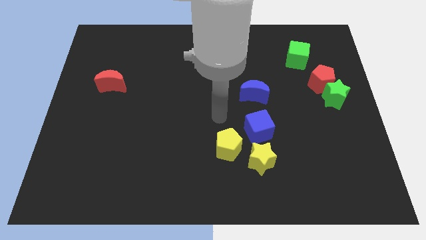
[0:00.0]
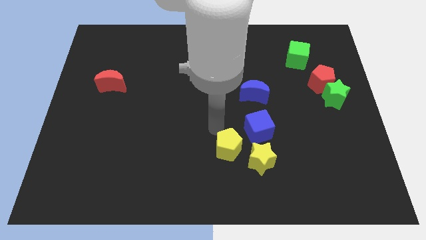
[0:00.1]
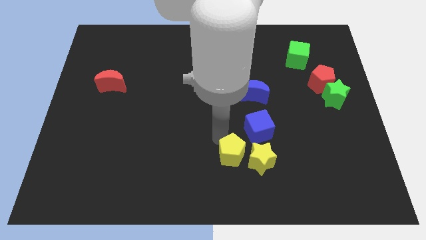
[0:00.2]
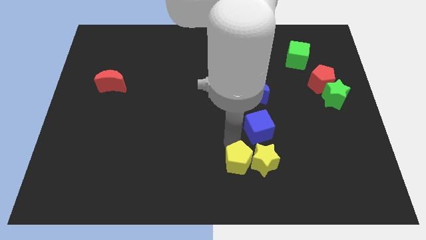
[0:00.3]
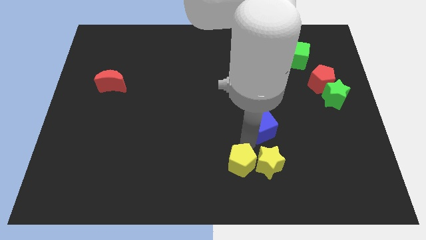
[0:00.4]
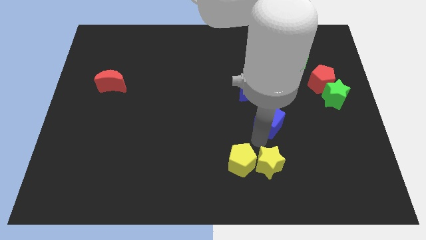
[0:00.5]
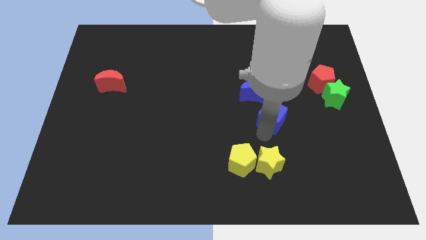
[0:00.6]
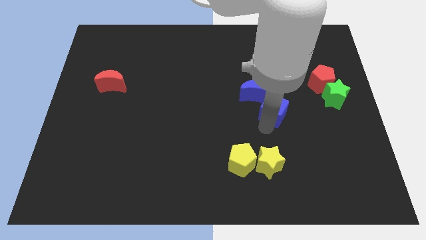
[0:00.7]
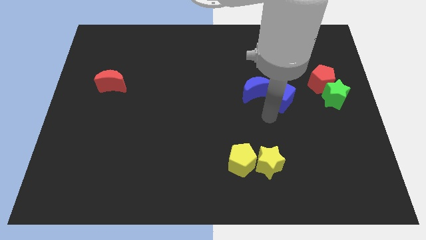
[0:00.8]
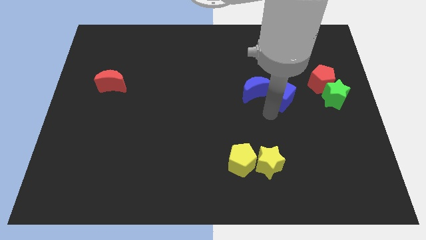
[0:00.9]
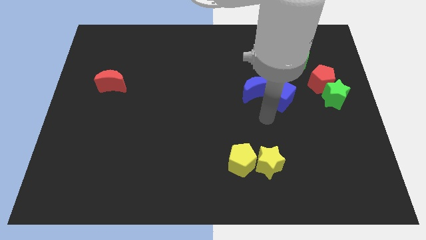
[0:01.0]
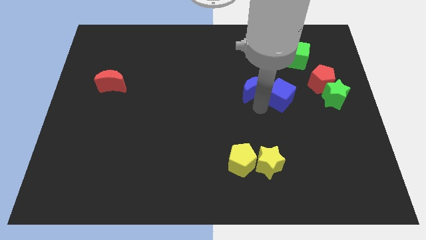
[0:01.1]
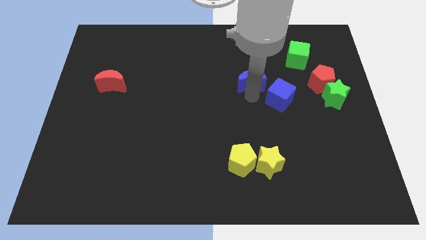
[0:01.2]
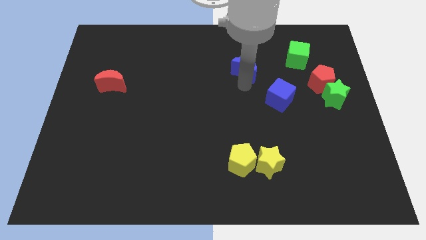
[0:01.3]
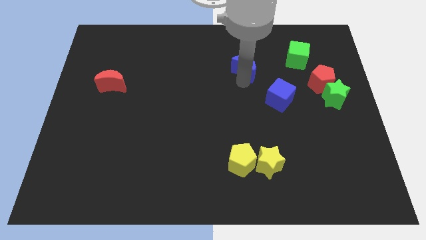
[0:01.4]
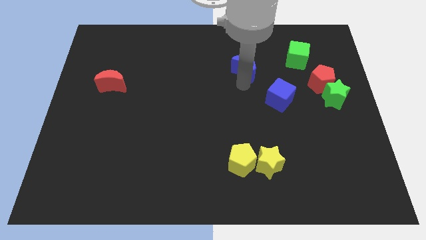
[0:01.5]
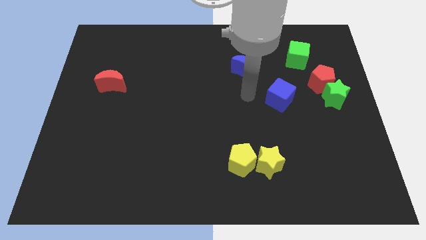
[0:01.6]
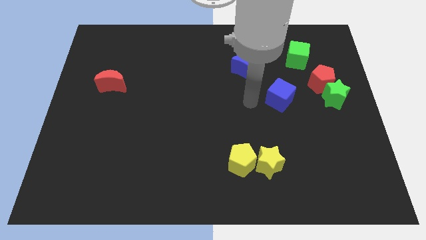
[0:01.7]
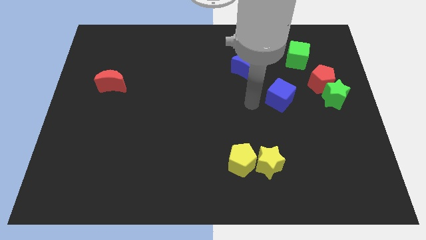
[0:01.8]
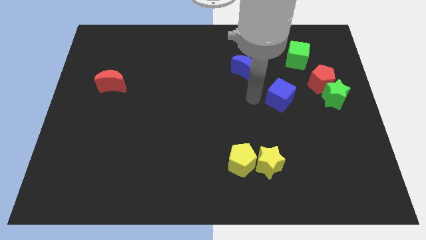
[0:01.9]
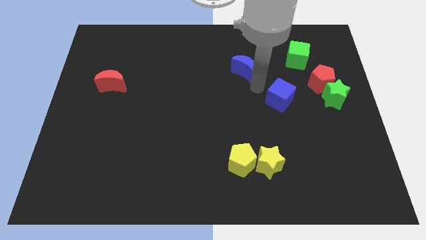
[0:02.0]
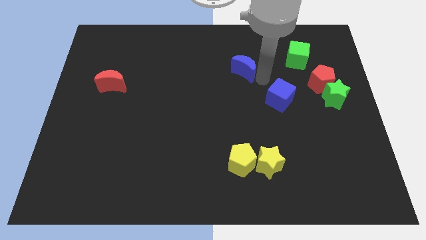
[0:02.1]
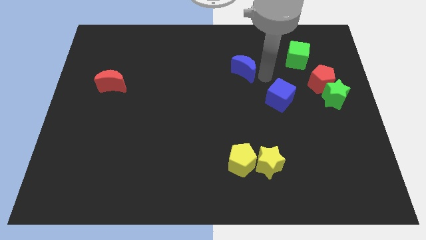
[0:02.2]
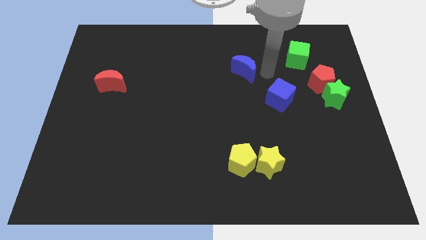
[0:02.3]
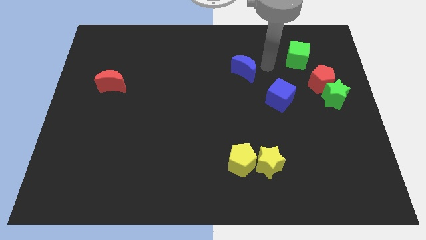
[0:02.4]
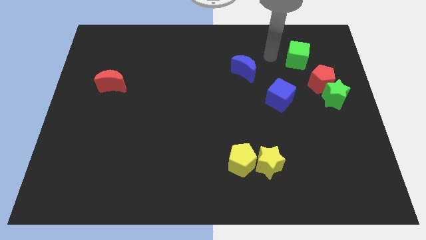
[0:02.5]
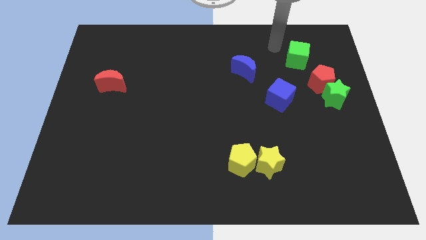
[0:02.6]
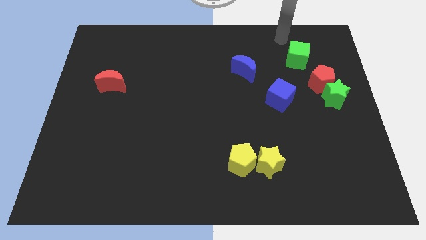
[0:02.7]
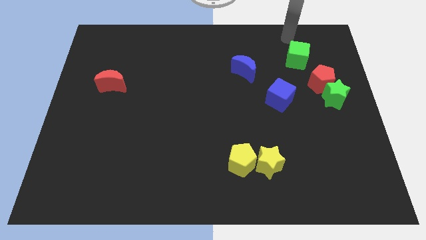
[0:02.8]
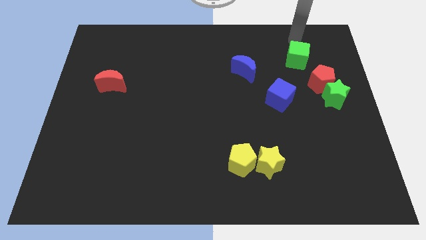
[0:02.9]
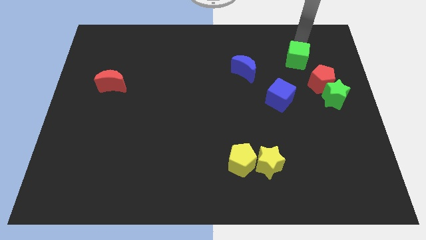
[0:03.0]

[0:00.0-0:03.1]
push the yellow pentagon into the yellow star

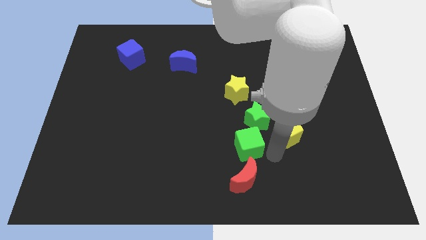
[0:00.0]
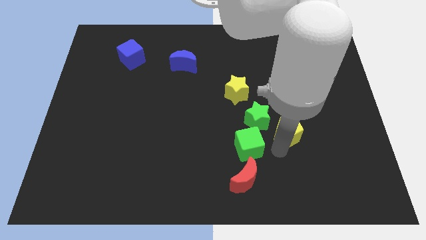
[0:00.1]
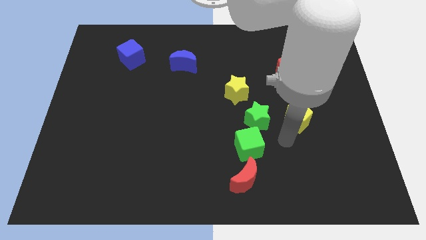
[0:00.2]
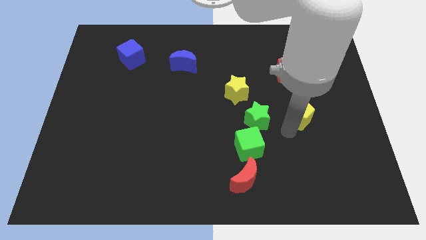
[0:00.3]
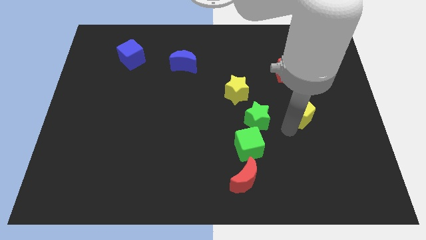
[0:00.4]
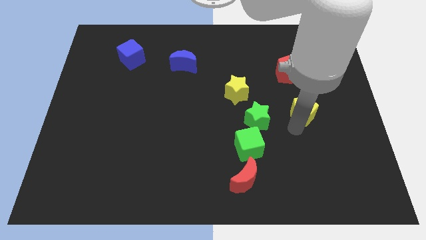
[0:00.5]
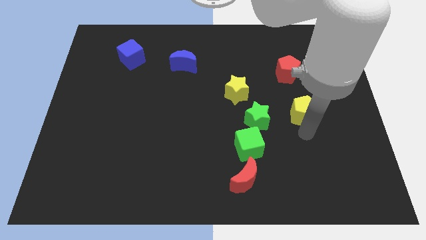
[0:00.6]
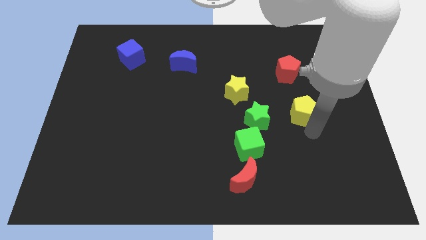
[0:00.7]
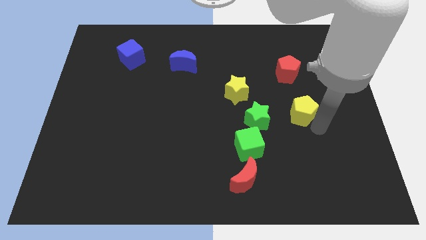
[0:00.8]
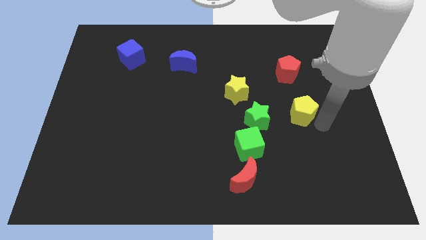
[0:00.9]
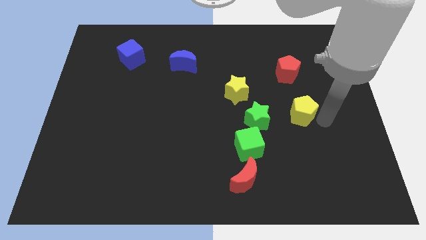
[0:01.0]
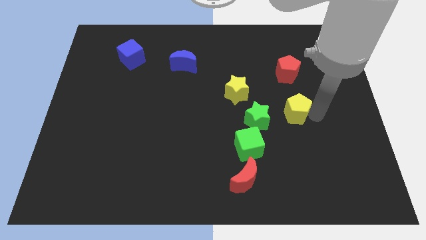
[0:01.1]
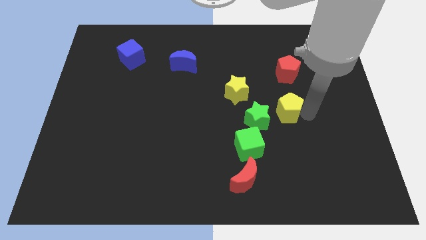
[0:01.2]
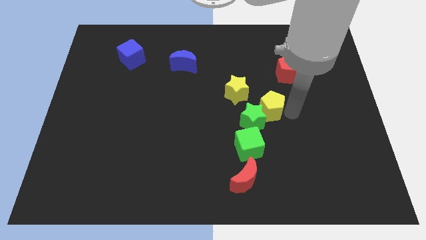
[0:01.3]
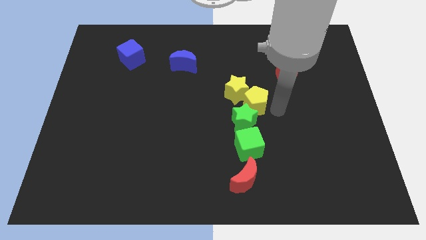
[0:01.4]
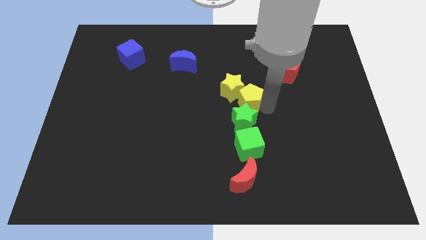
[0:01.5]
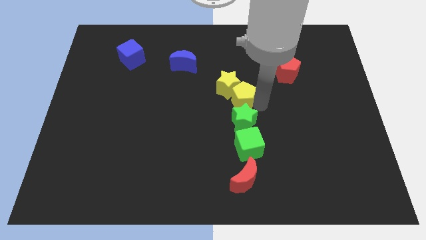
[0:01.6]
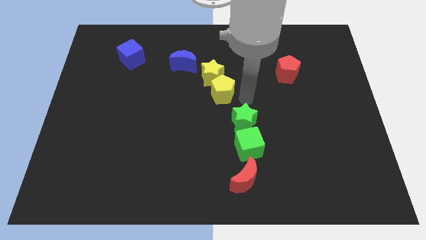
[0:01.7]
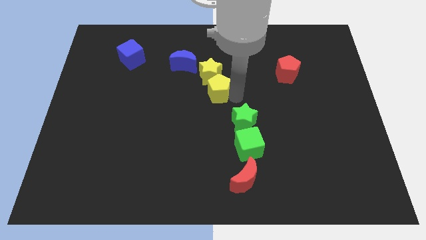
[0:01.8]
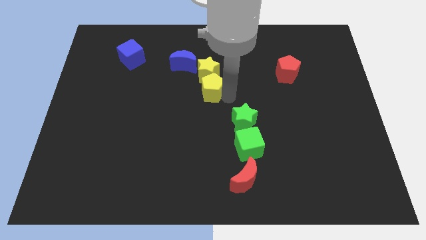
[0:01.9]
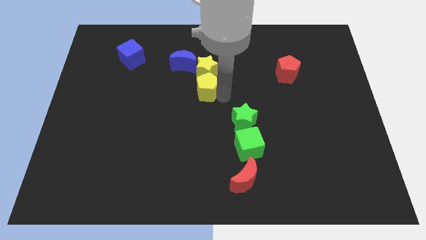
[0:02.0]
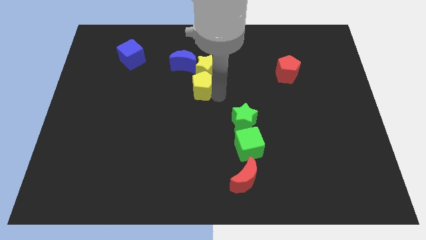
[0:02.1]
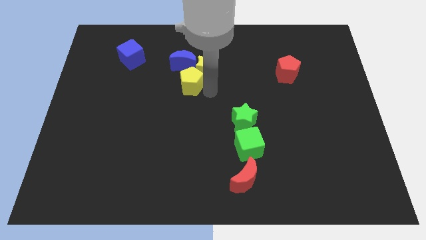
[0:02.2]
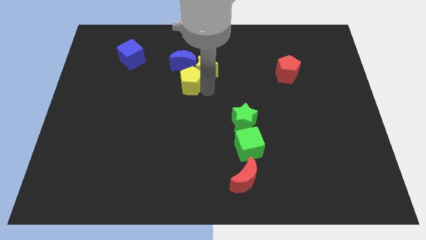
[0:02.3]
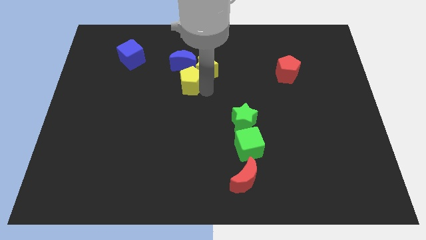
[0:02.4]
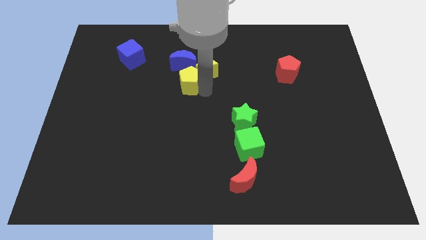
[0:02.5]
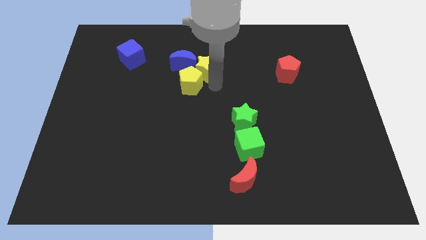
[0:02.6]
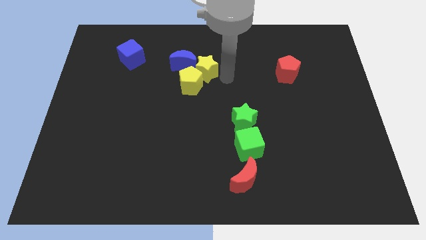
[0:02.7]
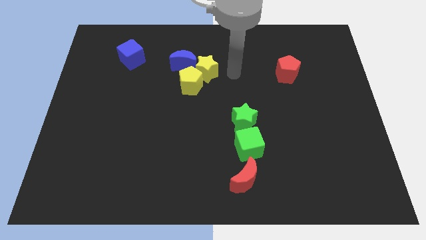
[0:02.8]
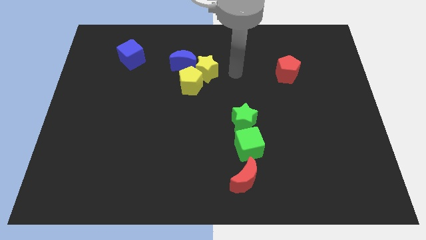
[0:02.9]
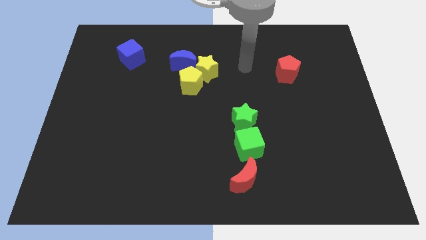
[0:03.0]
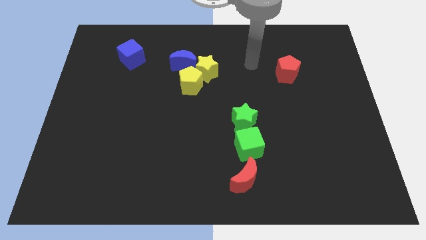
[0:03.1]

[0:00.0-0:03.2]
move the yellow pentagon along with yellow star close to the blue crescent

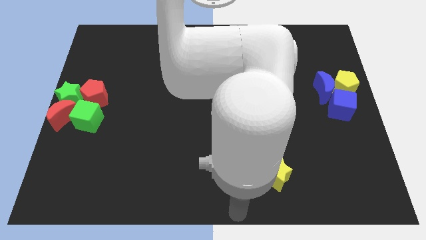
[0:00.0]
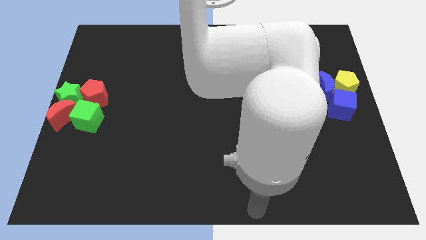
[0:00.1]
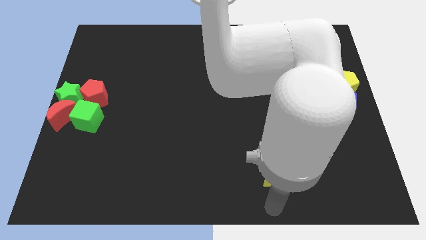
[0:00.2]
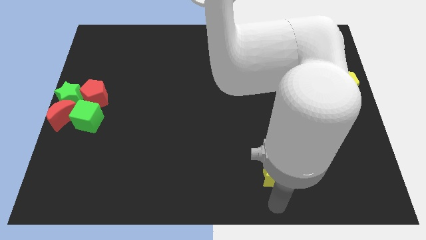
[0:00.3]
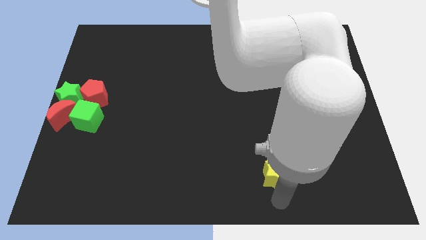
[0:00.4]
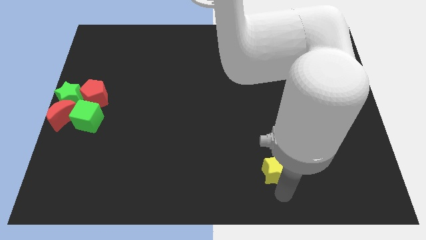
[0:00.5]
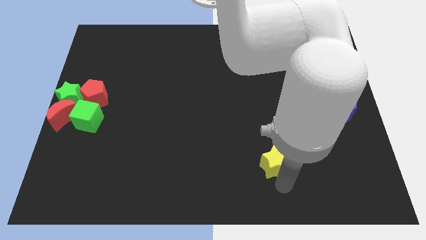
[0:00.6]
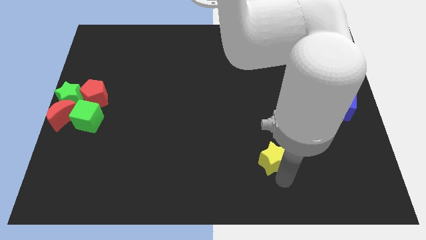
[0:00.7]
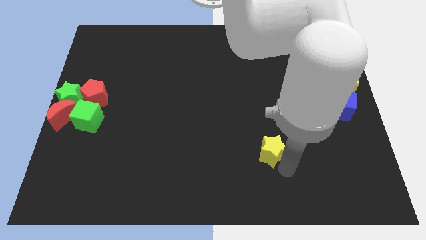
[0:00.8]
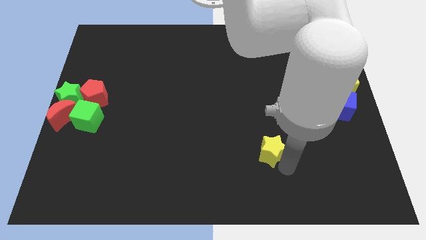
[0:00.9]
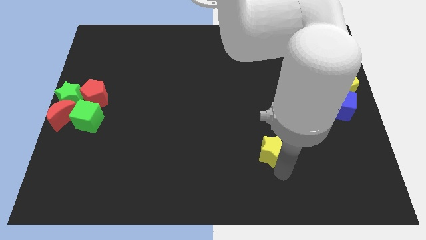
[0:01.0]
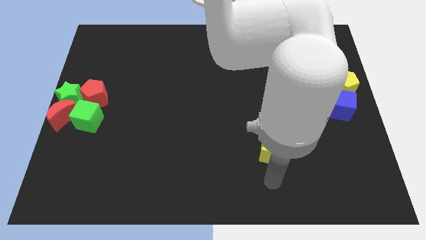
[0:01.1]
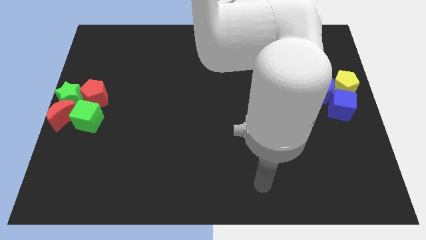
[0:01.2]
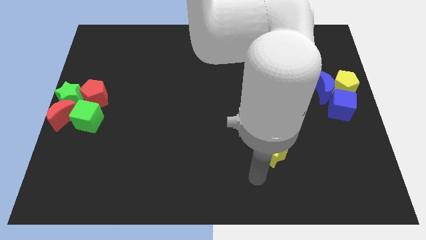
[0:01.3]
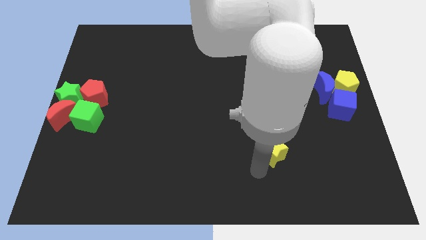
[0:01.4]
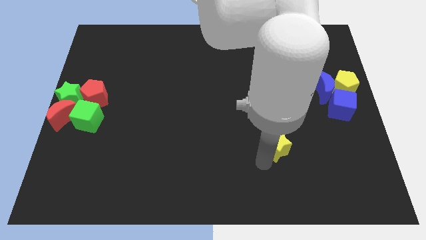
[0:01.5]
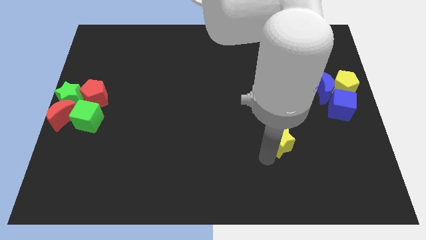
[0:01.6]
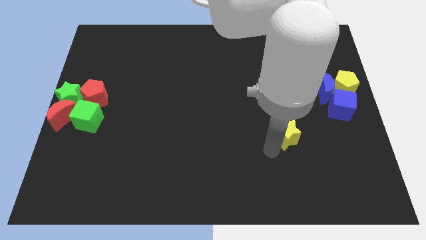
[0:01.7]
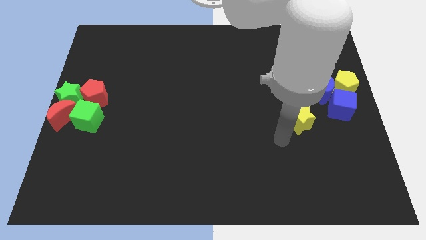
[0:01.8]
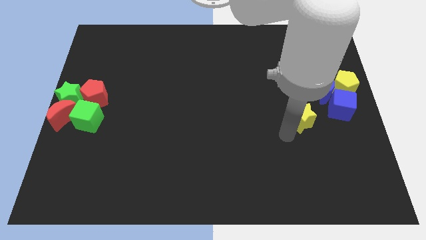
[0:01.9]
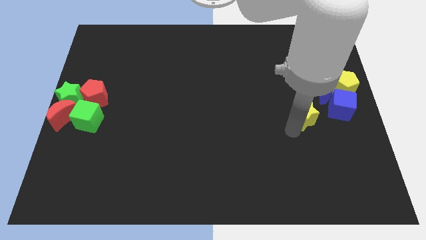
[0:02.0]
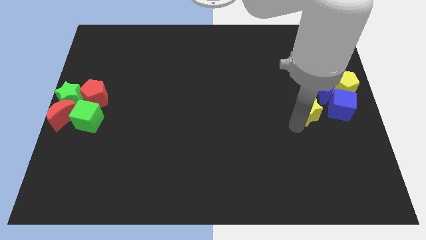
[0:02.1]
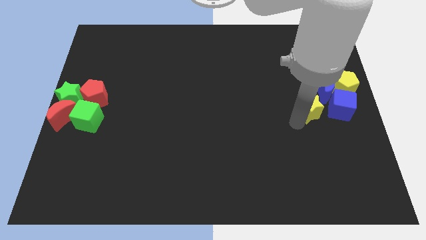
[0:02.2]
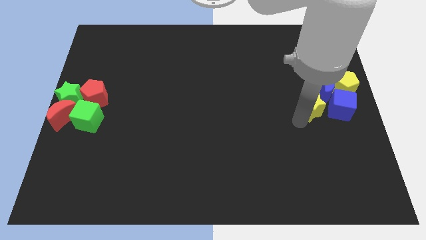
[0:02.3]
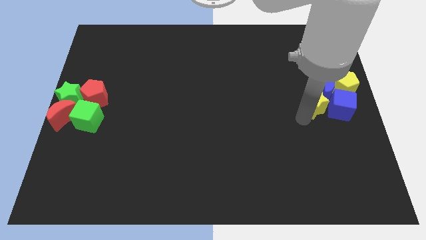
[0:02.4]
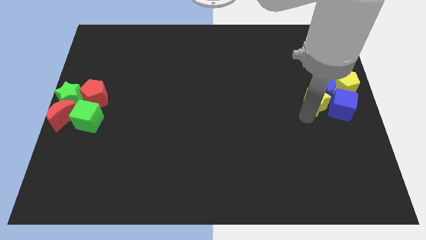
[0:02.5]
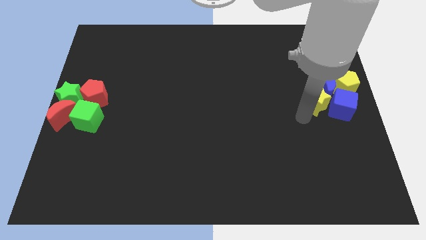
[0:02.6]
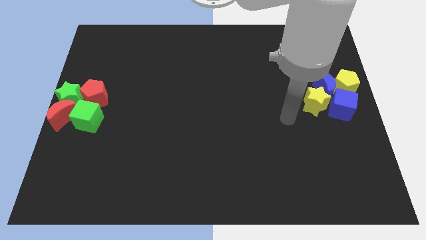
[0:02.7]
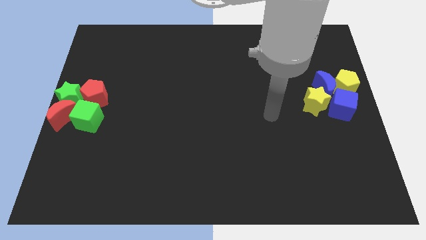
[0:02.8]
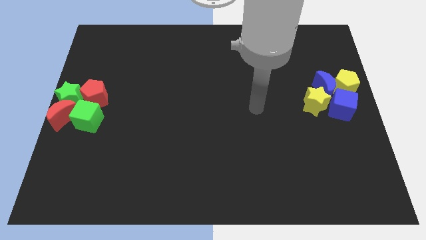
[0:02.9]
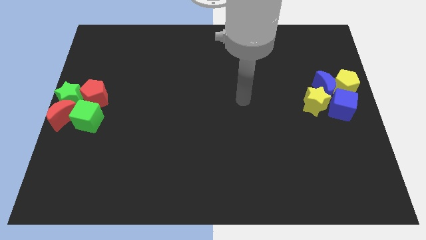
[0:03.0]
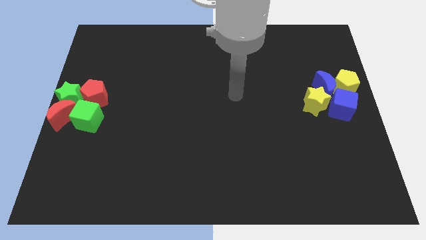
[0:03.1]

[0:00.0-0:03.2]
drag the yellow star and place it close to the blue moon
